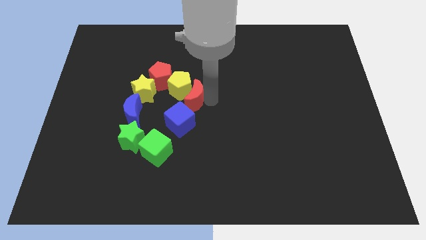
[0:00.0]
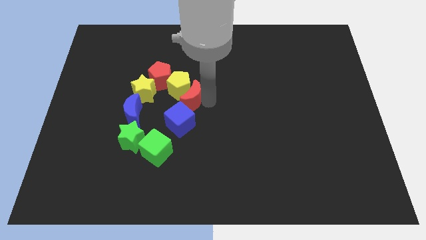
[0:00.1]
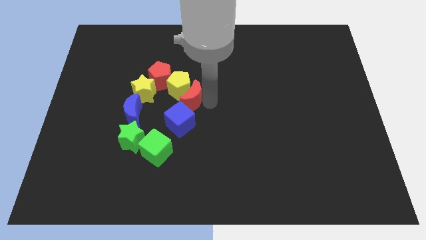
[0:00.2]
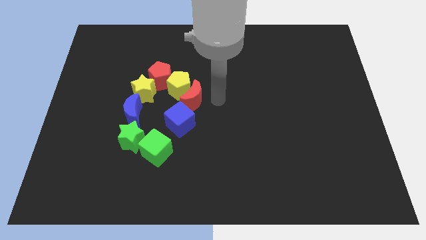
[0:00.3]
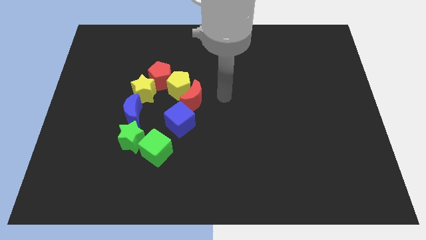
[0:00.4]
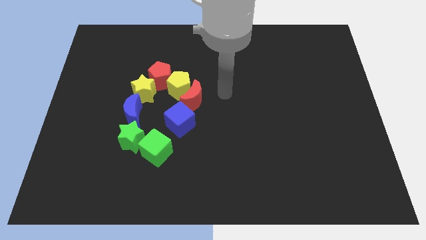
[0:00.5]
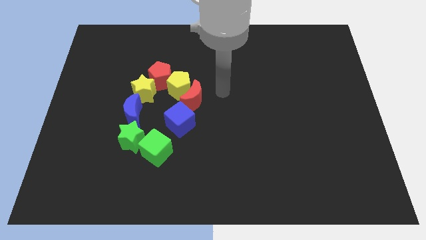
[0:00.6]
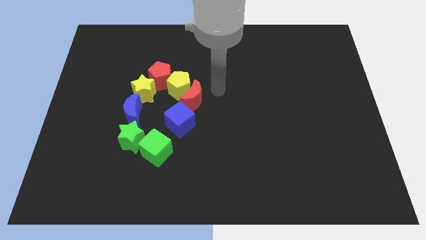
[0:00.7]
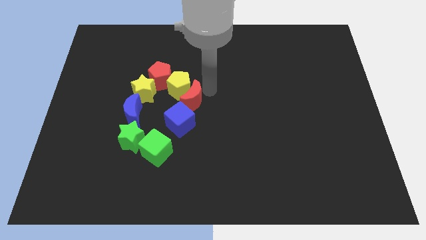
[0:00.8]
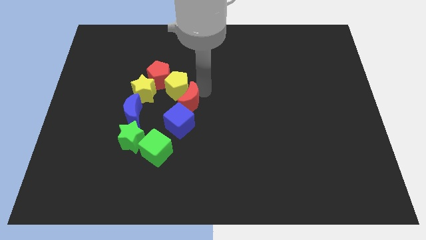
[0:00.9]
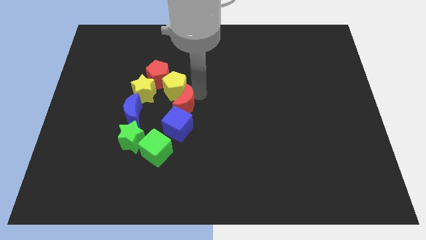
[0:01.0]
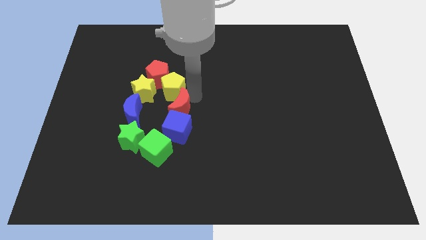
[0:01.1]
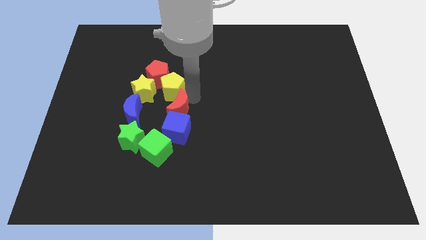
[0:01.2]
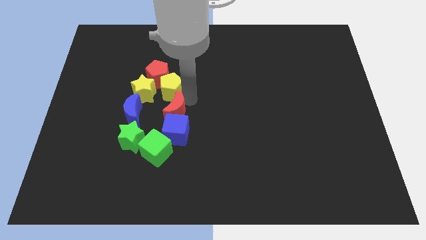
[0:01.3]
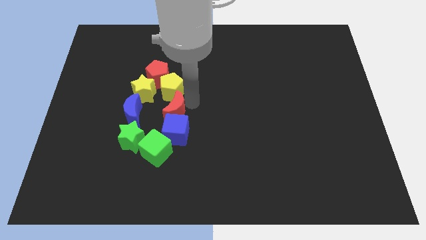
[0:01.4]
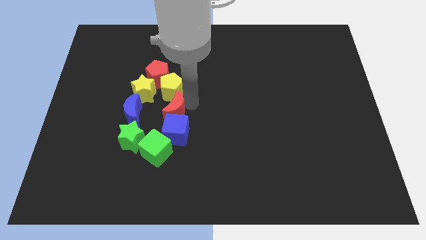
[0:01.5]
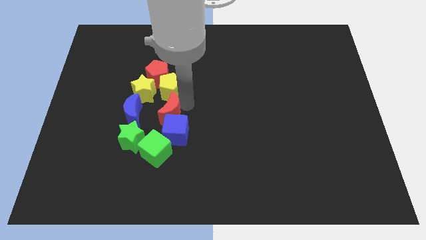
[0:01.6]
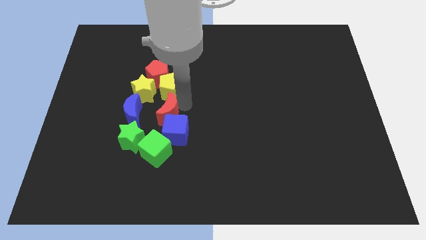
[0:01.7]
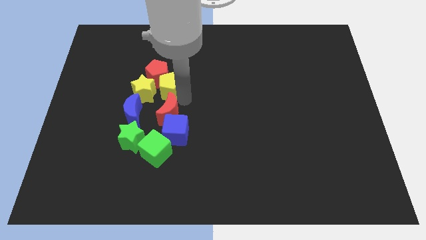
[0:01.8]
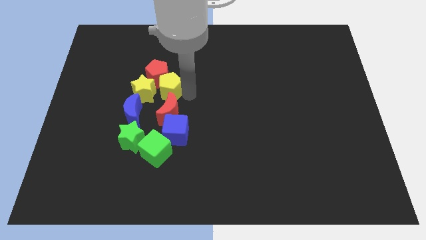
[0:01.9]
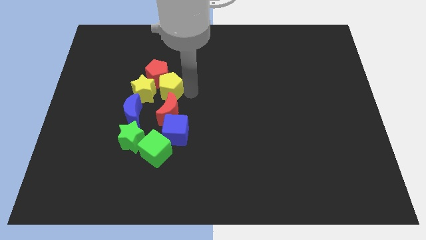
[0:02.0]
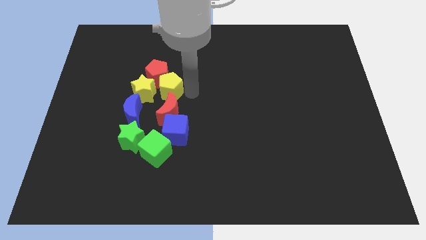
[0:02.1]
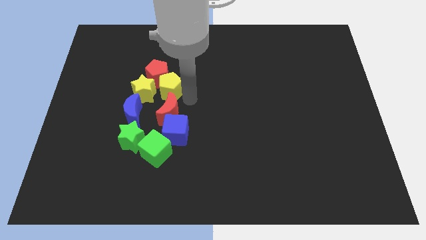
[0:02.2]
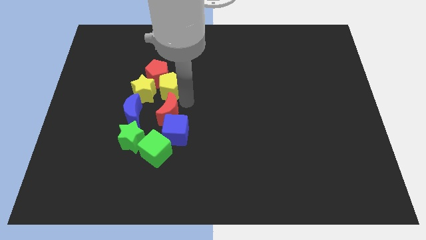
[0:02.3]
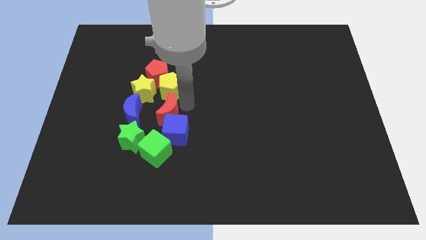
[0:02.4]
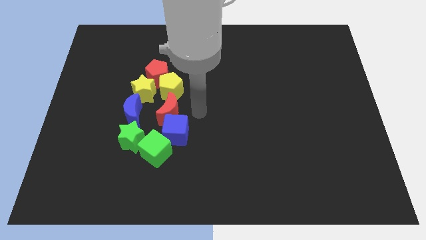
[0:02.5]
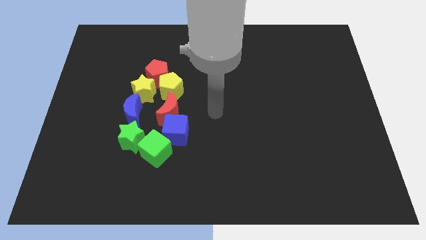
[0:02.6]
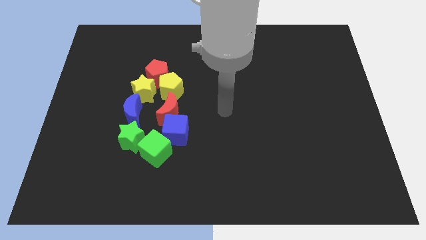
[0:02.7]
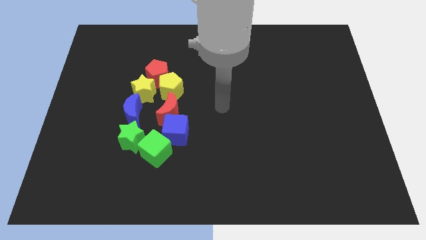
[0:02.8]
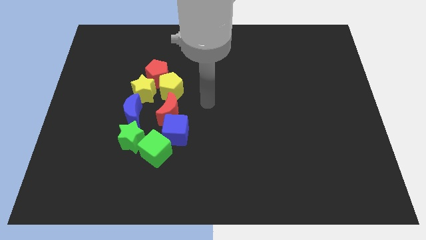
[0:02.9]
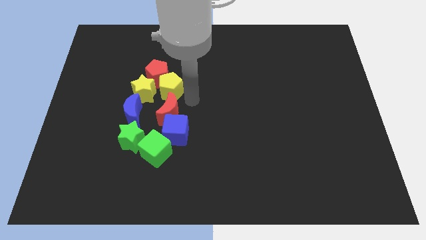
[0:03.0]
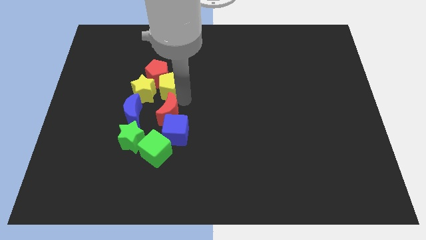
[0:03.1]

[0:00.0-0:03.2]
slide the red moon to the right of the blue moon

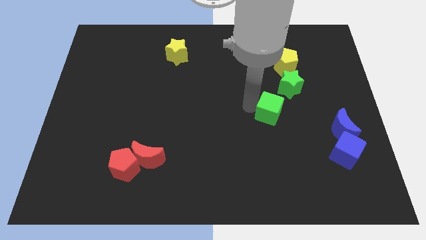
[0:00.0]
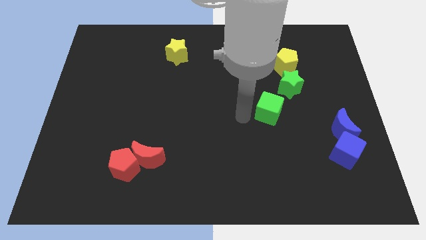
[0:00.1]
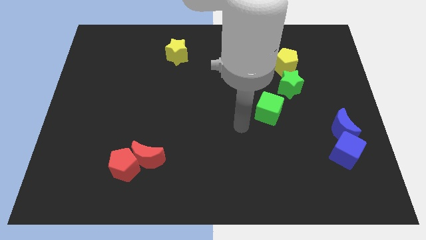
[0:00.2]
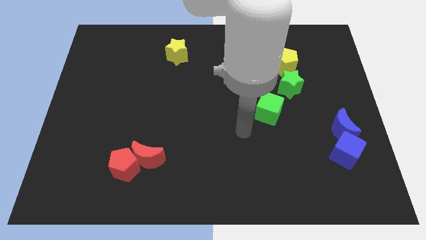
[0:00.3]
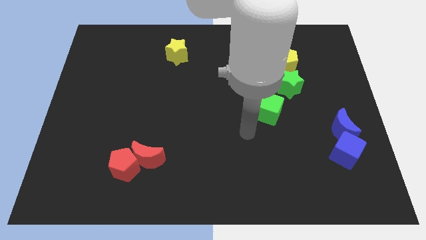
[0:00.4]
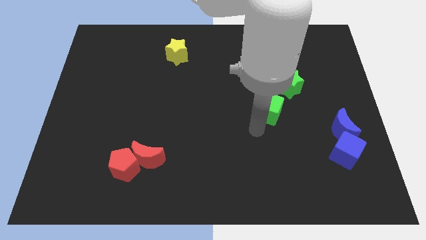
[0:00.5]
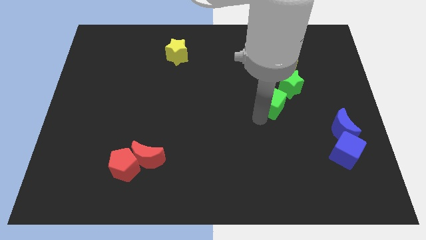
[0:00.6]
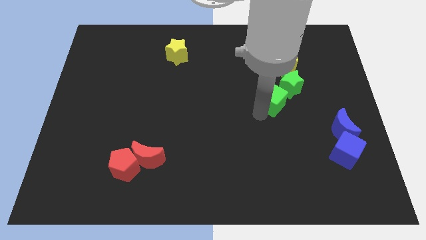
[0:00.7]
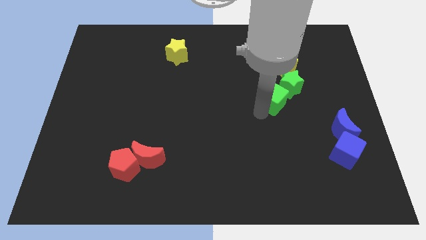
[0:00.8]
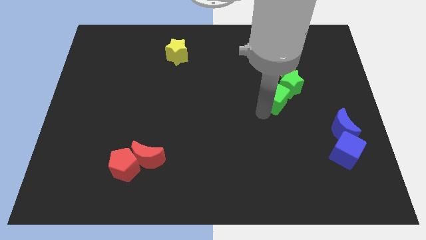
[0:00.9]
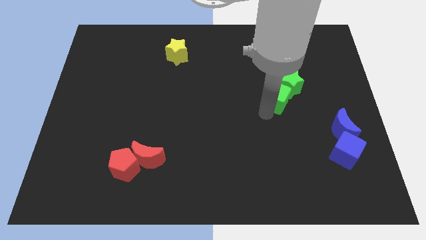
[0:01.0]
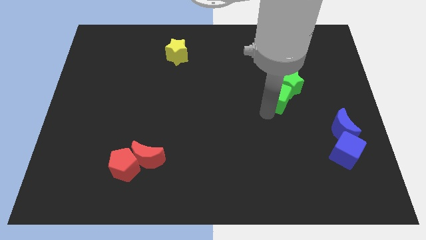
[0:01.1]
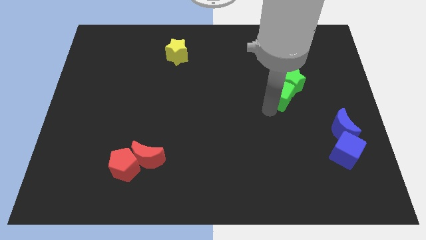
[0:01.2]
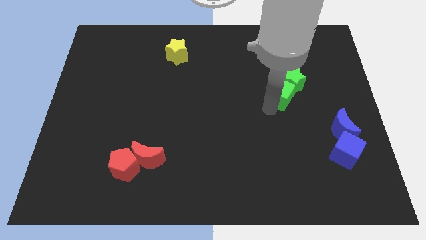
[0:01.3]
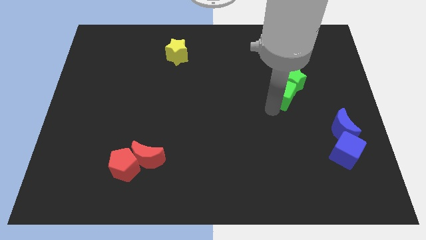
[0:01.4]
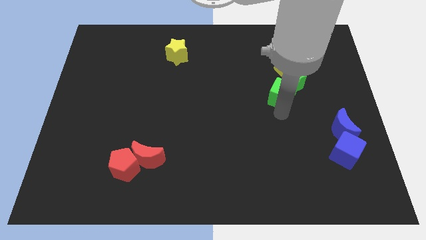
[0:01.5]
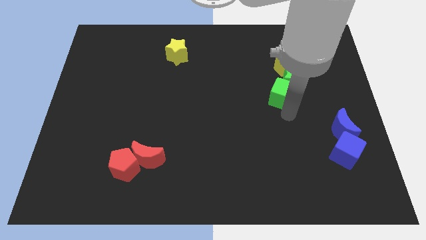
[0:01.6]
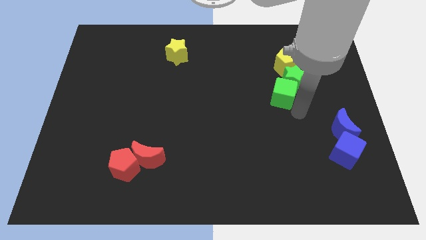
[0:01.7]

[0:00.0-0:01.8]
move the green cube towards the green star

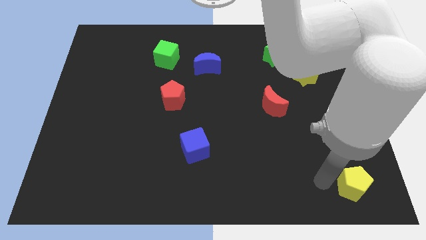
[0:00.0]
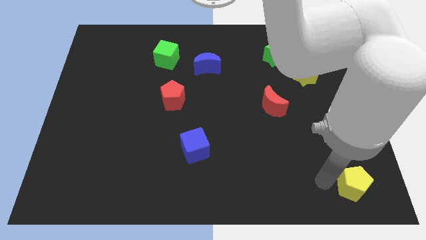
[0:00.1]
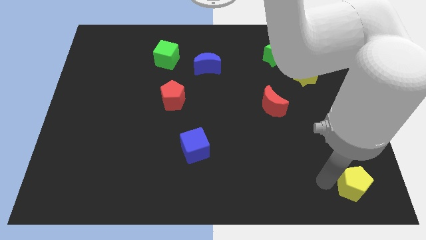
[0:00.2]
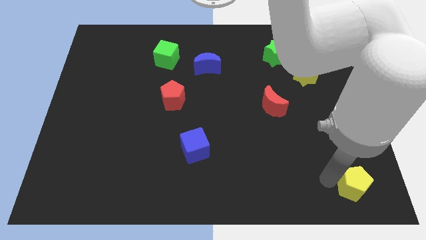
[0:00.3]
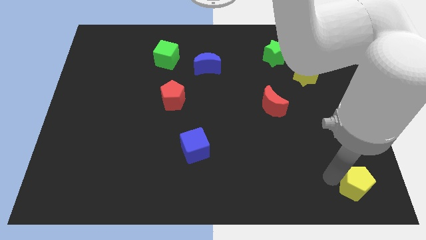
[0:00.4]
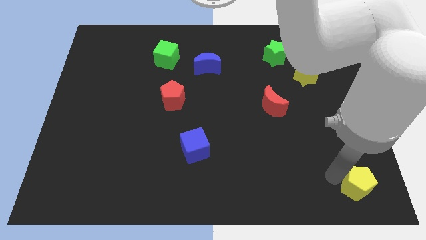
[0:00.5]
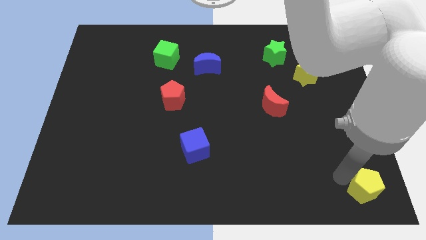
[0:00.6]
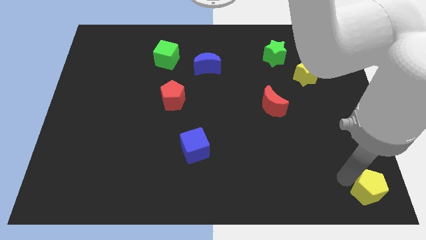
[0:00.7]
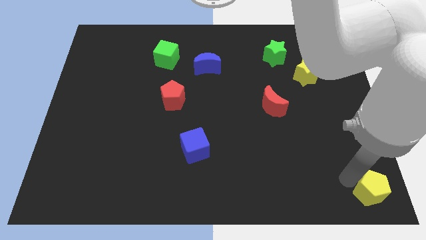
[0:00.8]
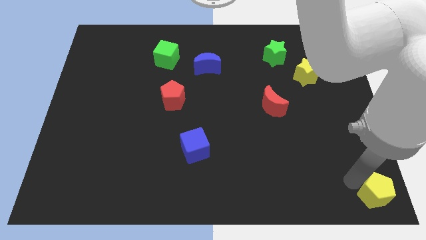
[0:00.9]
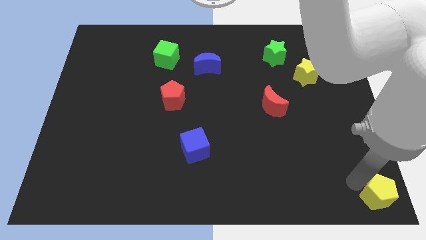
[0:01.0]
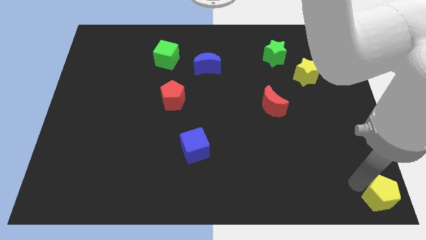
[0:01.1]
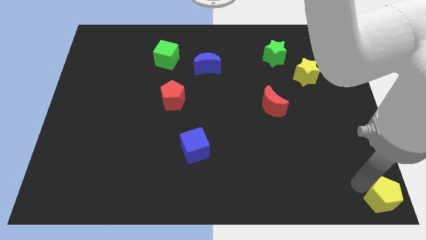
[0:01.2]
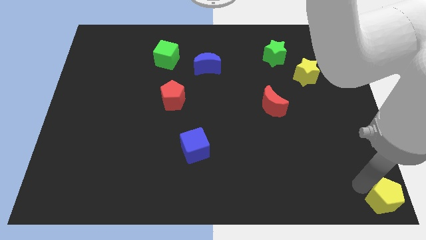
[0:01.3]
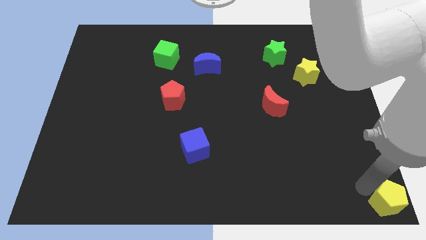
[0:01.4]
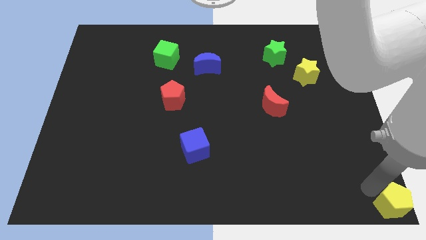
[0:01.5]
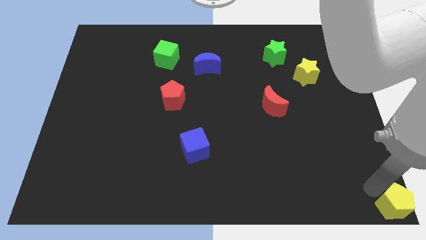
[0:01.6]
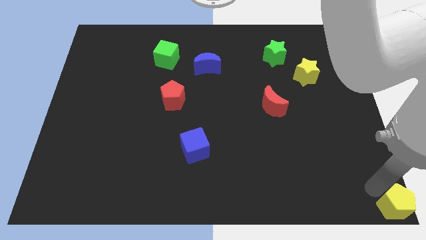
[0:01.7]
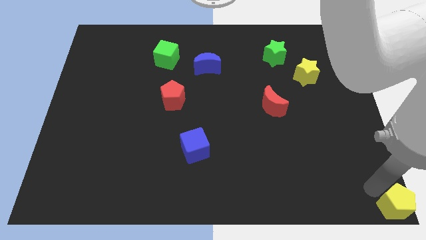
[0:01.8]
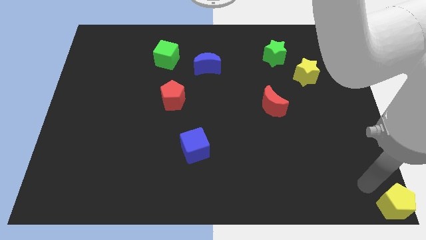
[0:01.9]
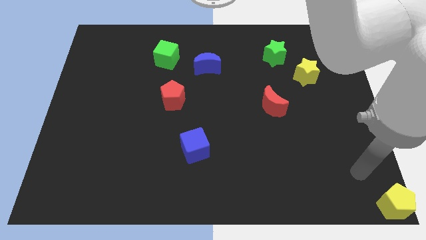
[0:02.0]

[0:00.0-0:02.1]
push the yellow pentagon to the bottom right corner edge of the board

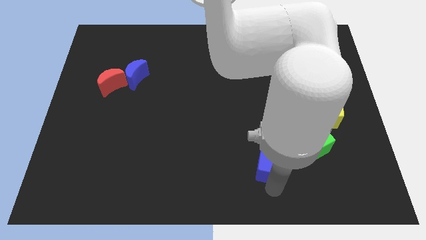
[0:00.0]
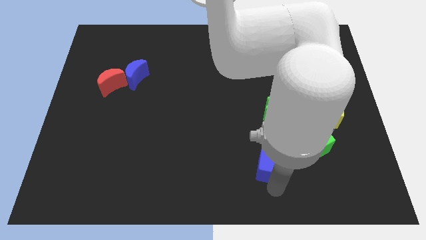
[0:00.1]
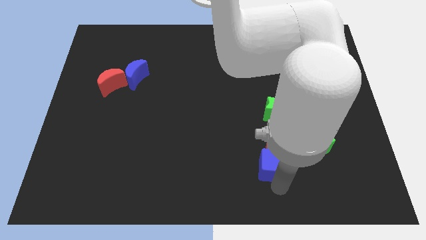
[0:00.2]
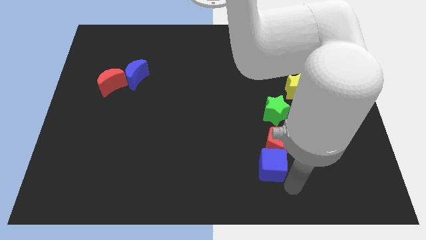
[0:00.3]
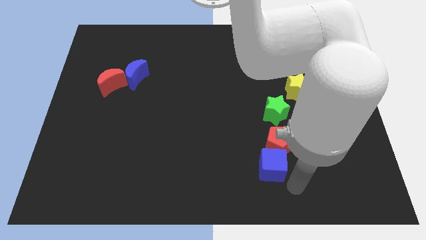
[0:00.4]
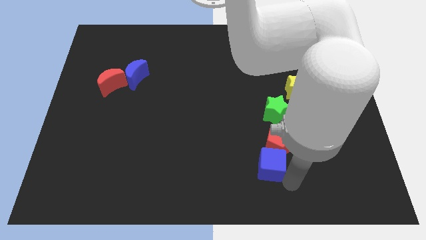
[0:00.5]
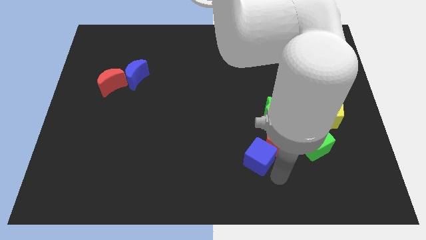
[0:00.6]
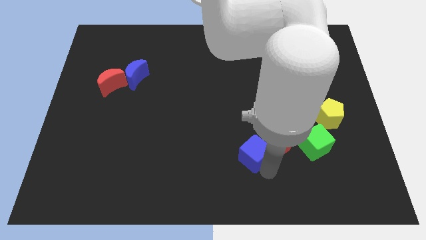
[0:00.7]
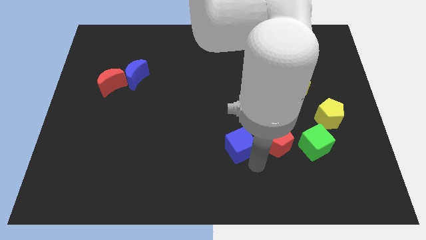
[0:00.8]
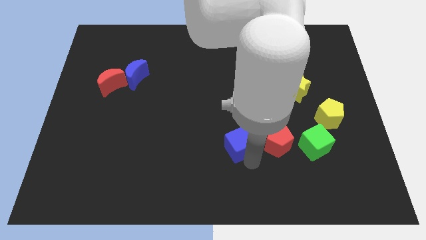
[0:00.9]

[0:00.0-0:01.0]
push blue cube beside red pentagon

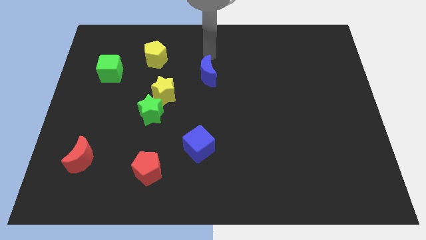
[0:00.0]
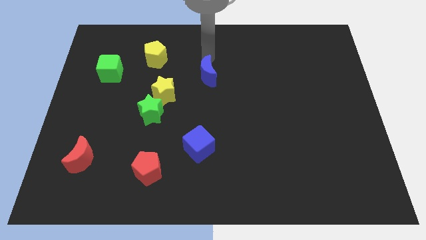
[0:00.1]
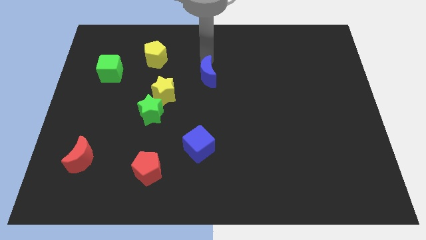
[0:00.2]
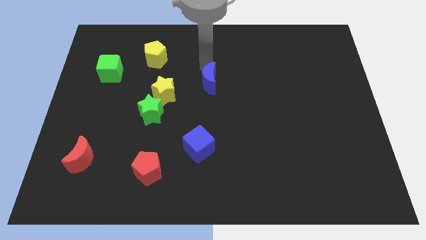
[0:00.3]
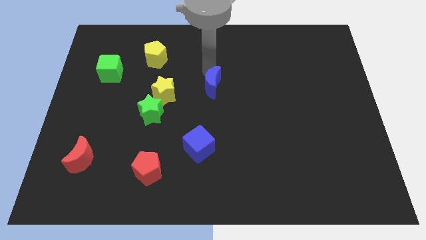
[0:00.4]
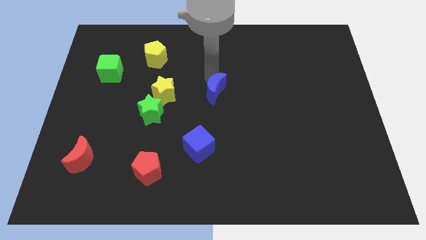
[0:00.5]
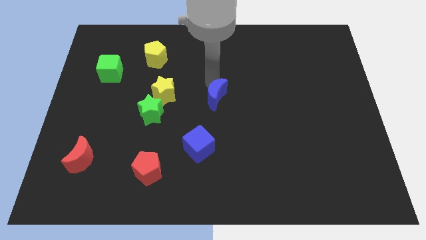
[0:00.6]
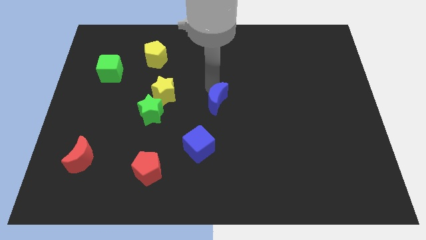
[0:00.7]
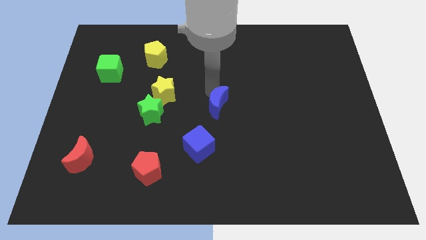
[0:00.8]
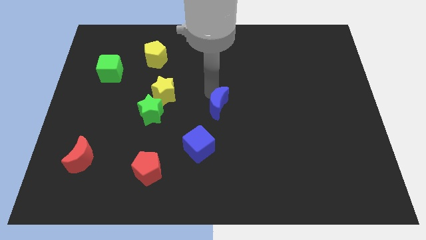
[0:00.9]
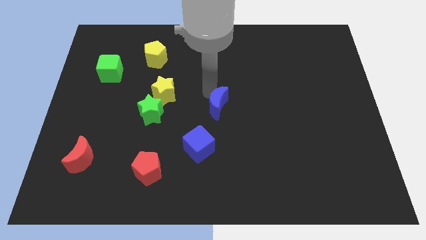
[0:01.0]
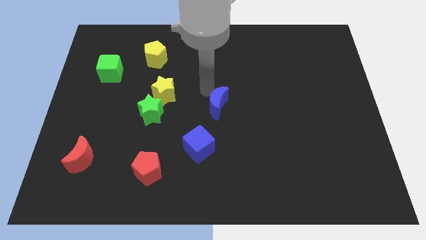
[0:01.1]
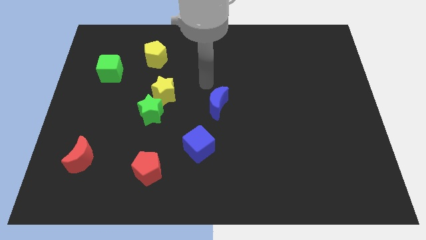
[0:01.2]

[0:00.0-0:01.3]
move the blue crescent to the center of the board
